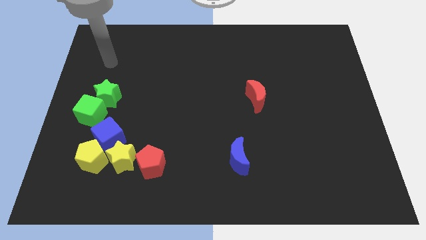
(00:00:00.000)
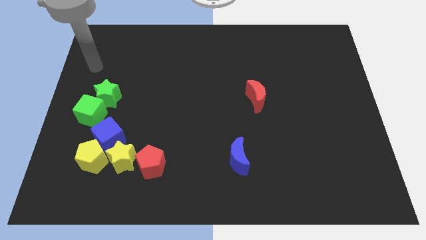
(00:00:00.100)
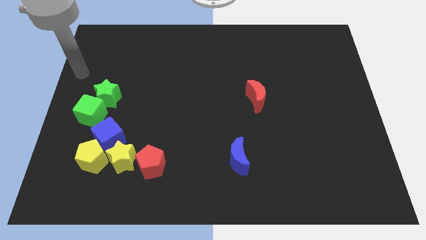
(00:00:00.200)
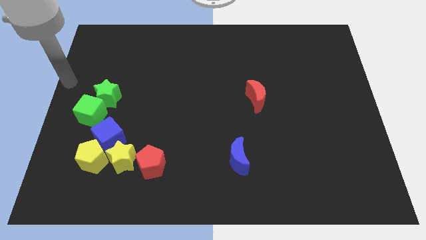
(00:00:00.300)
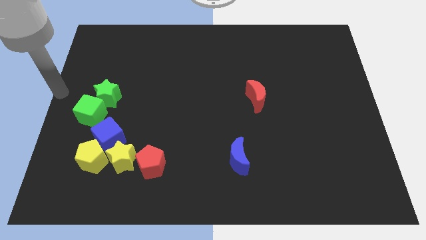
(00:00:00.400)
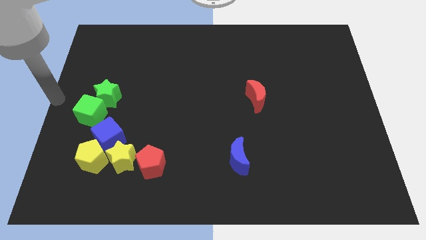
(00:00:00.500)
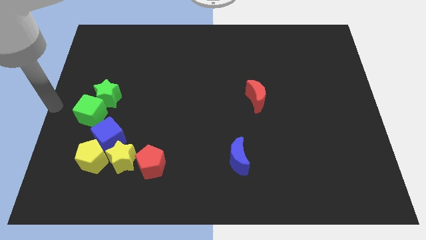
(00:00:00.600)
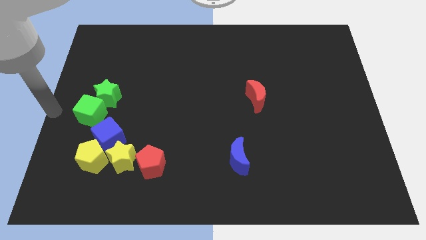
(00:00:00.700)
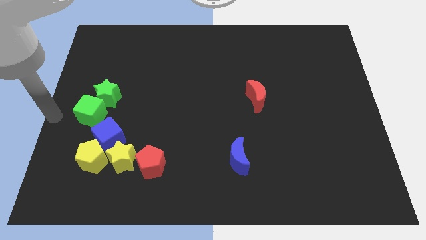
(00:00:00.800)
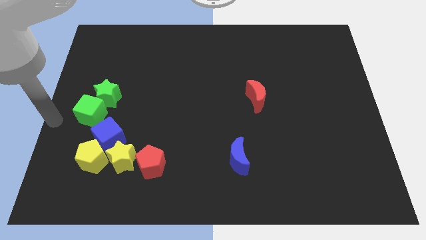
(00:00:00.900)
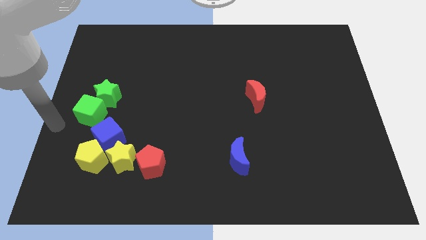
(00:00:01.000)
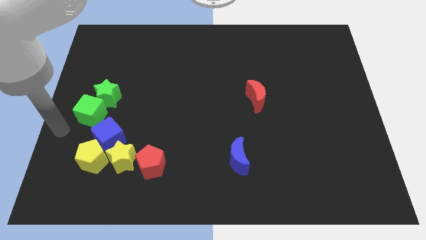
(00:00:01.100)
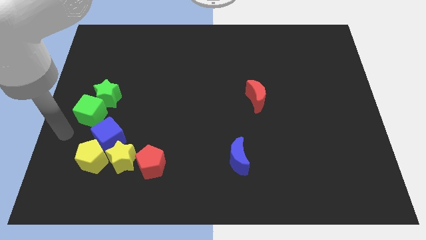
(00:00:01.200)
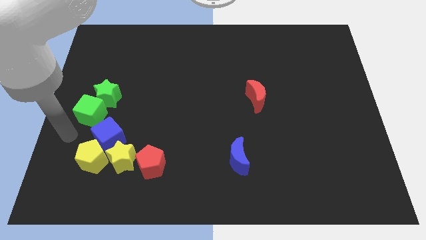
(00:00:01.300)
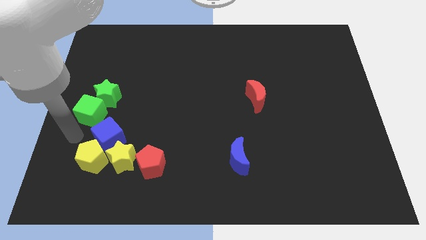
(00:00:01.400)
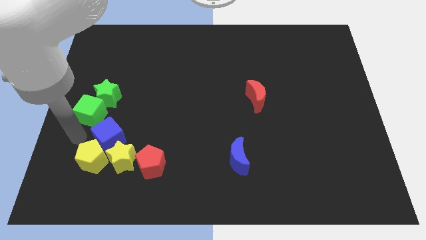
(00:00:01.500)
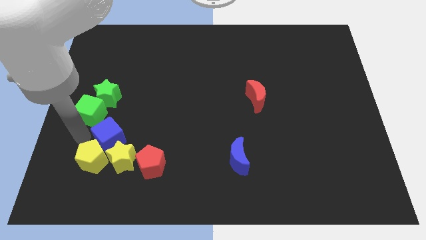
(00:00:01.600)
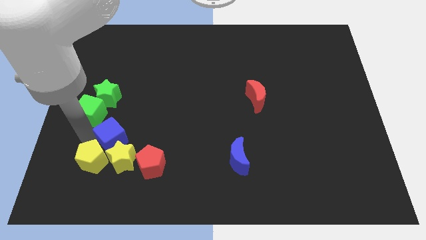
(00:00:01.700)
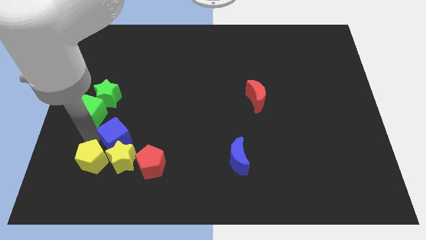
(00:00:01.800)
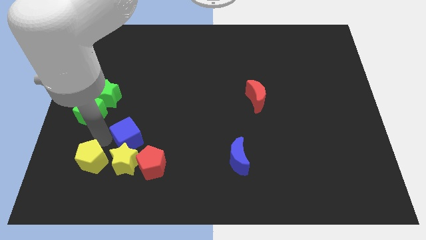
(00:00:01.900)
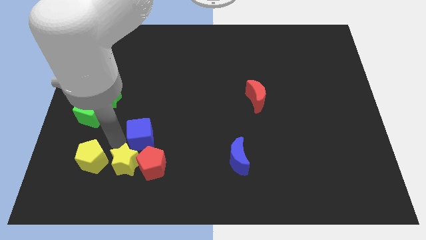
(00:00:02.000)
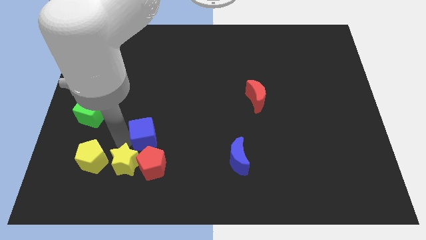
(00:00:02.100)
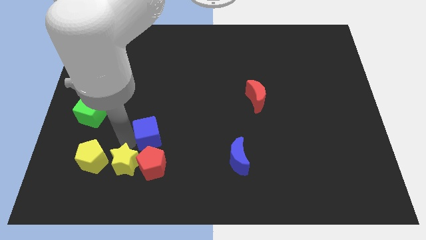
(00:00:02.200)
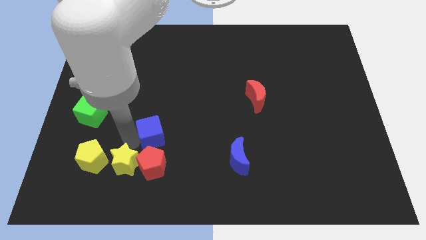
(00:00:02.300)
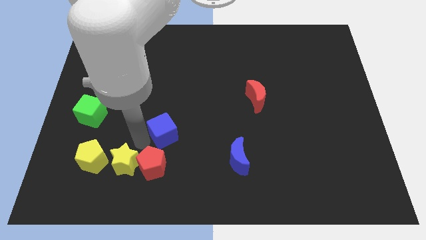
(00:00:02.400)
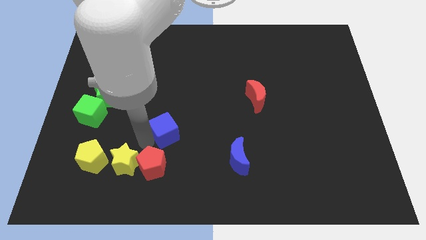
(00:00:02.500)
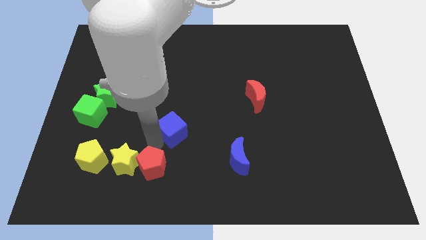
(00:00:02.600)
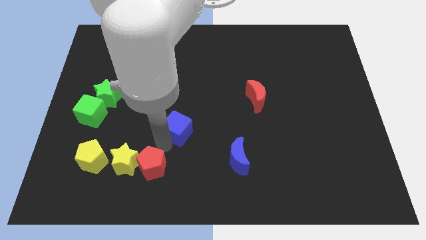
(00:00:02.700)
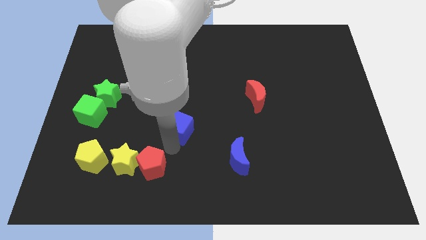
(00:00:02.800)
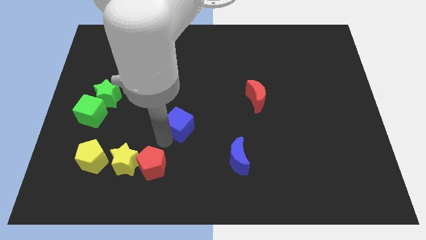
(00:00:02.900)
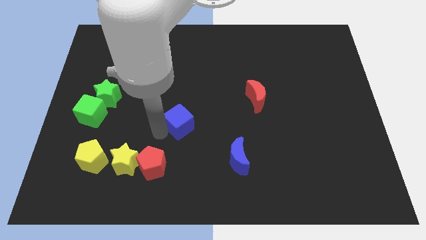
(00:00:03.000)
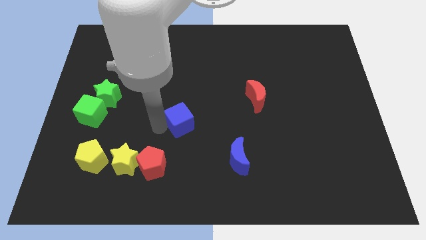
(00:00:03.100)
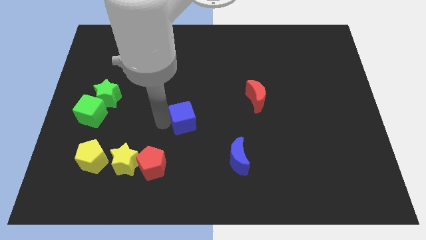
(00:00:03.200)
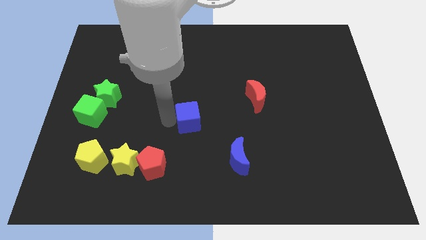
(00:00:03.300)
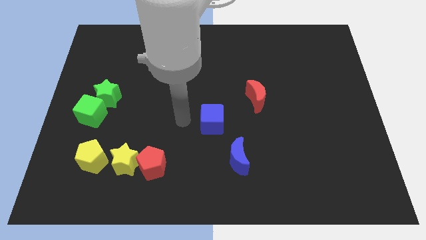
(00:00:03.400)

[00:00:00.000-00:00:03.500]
move the blue cube towards the top side of the blue crescent

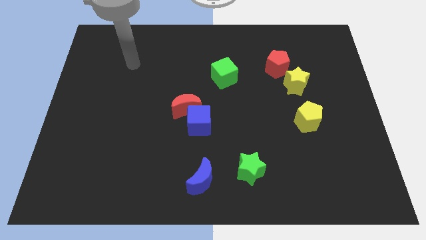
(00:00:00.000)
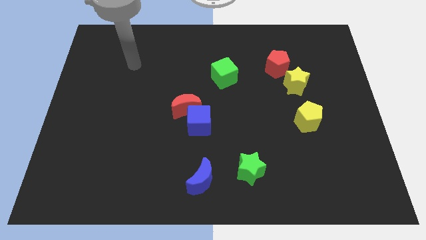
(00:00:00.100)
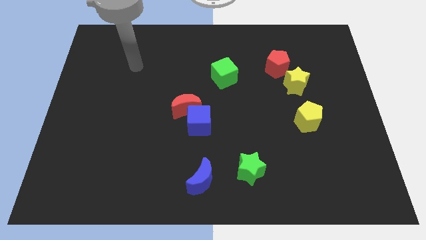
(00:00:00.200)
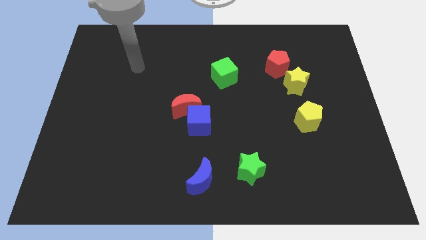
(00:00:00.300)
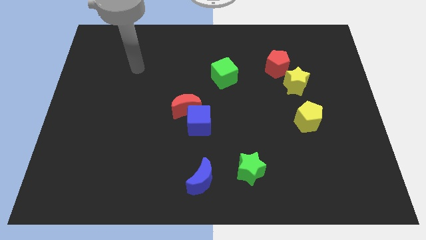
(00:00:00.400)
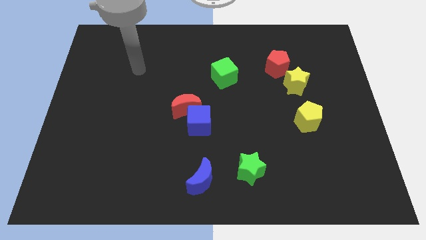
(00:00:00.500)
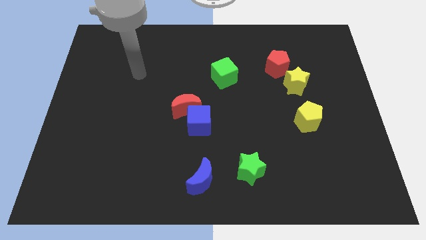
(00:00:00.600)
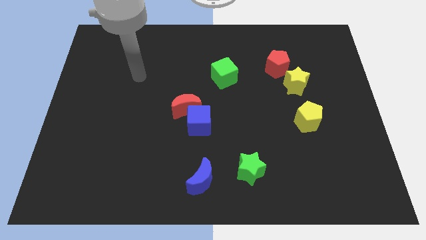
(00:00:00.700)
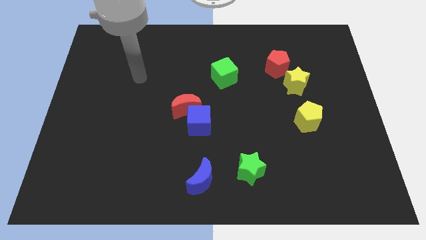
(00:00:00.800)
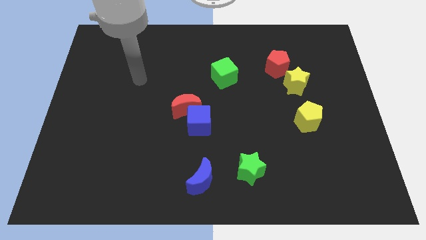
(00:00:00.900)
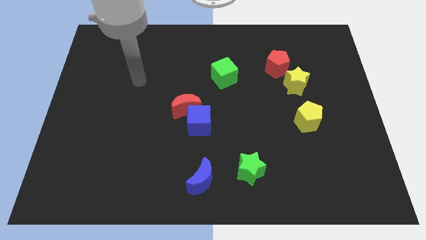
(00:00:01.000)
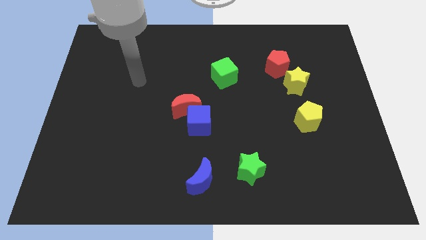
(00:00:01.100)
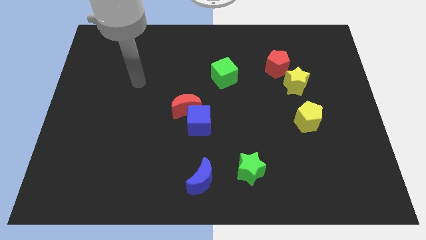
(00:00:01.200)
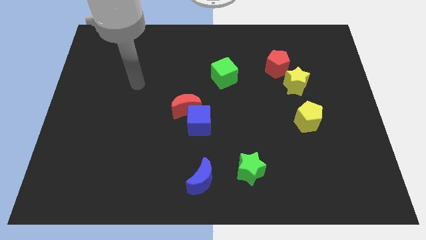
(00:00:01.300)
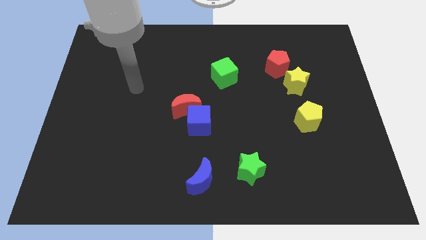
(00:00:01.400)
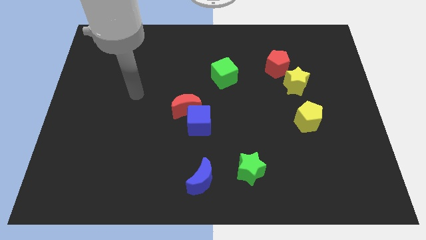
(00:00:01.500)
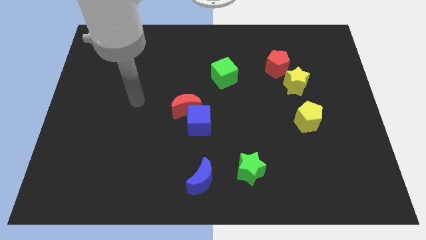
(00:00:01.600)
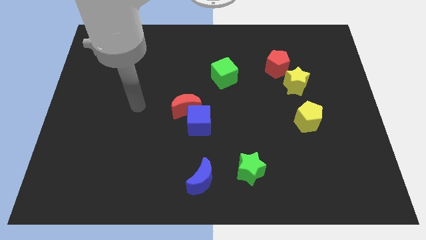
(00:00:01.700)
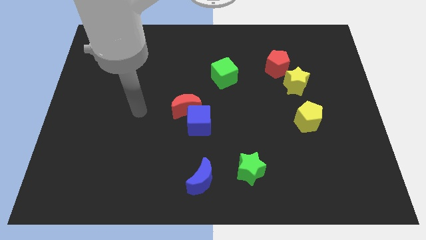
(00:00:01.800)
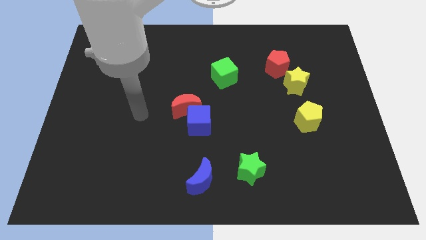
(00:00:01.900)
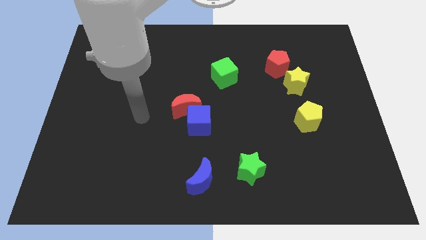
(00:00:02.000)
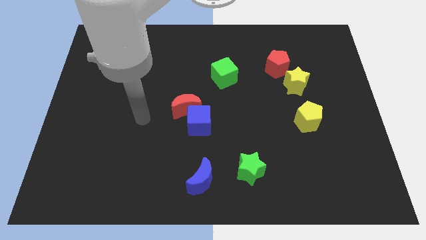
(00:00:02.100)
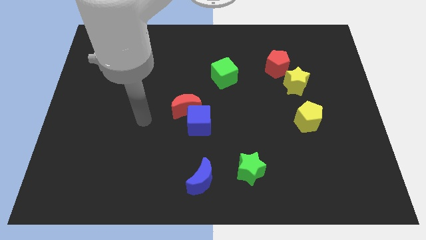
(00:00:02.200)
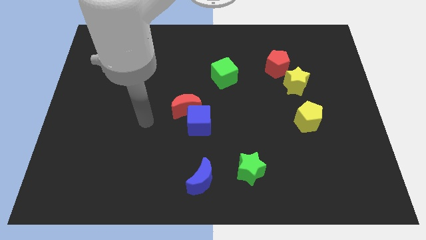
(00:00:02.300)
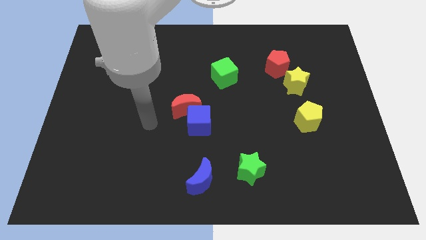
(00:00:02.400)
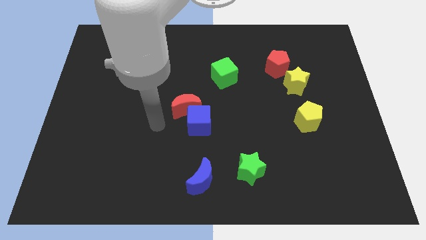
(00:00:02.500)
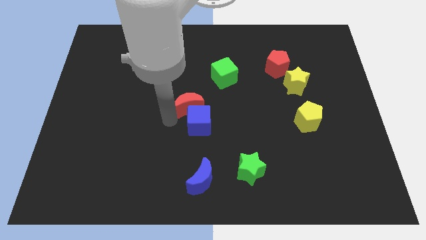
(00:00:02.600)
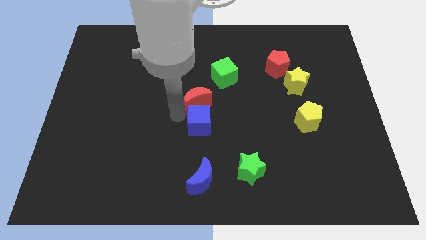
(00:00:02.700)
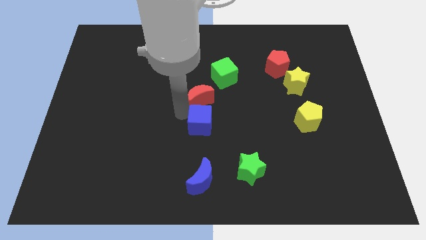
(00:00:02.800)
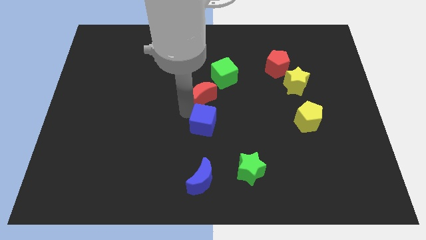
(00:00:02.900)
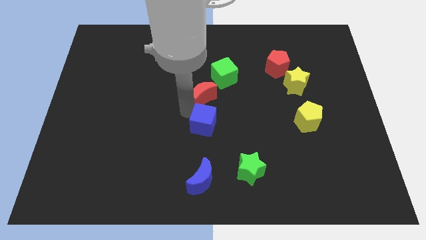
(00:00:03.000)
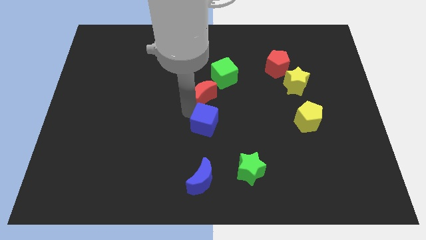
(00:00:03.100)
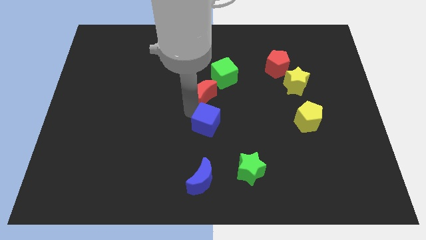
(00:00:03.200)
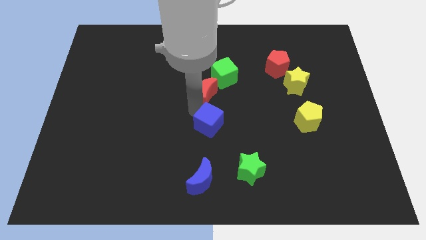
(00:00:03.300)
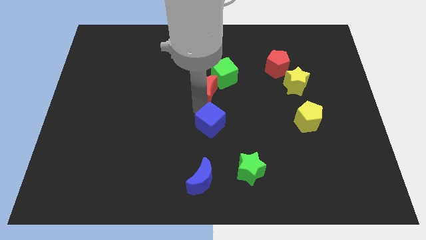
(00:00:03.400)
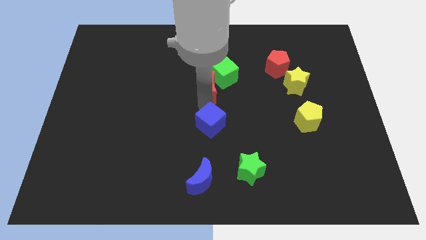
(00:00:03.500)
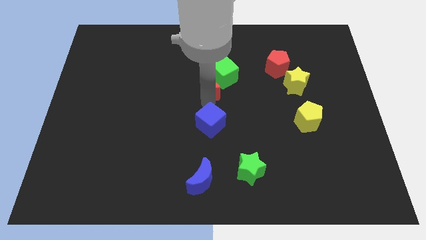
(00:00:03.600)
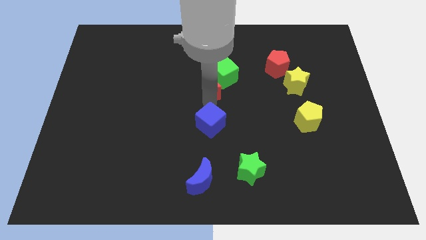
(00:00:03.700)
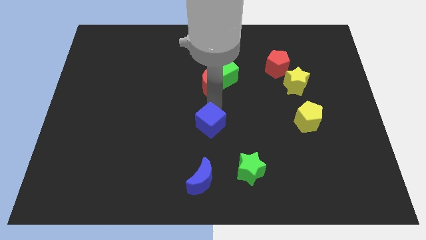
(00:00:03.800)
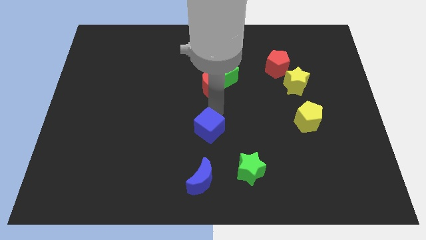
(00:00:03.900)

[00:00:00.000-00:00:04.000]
push the red moon into the green cube

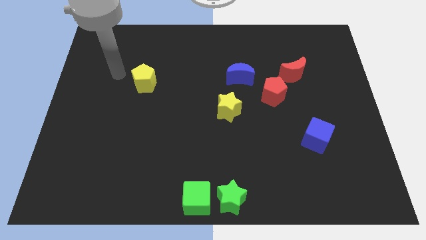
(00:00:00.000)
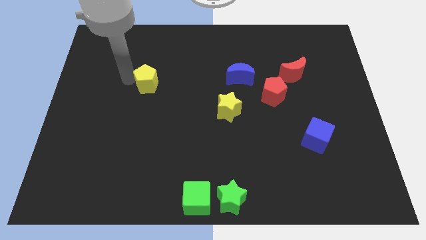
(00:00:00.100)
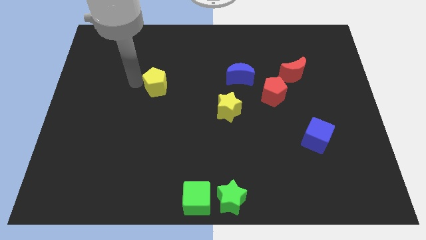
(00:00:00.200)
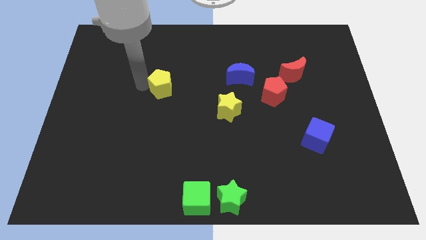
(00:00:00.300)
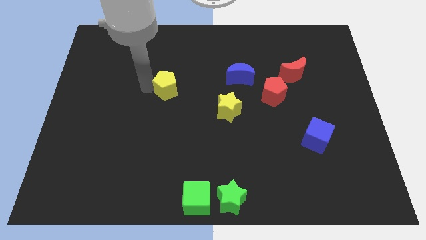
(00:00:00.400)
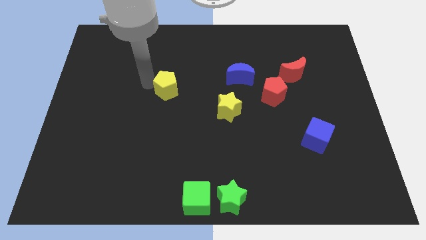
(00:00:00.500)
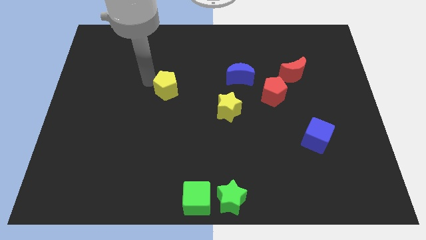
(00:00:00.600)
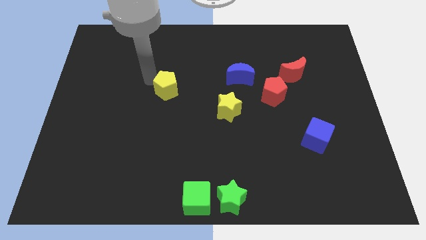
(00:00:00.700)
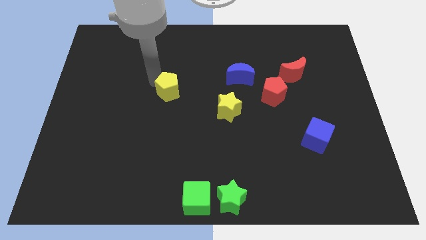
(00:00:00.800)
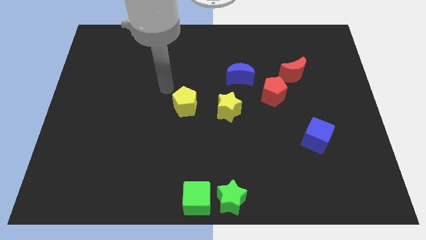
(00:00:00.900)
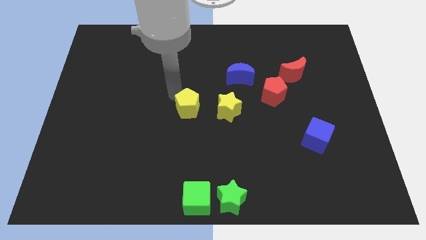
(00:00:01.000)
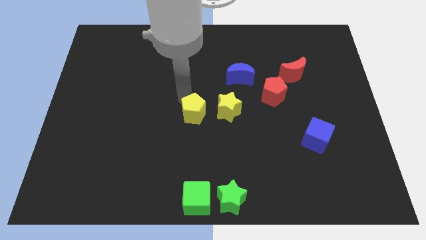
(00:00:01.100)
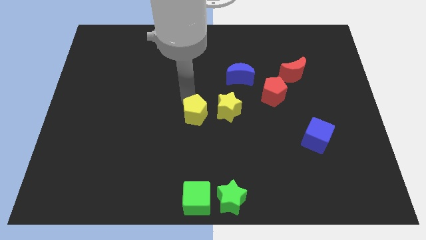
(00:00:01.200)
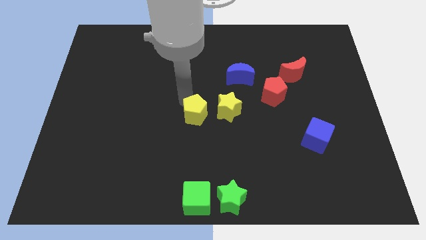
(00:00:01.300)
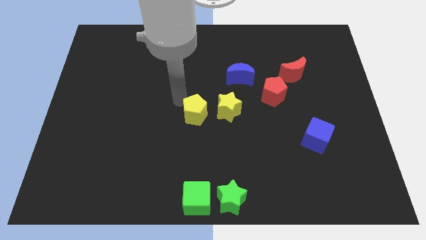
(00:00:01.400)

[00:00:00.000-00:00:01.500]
push the yellow pentagon to the left of yellow star
